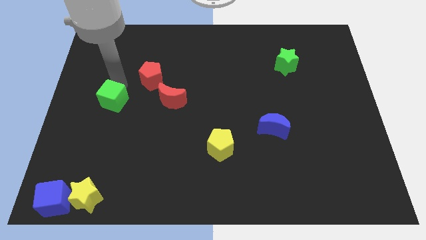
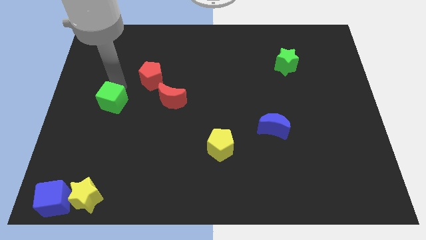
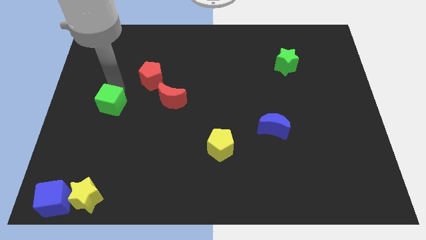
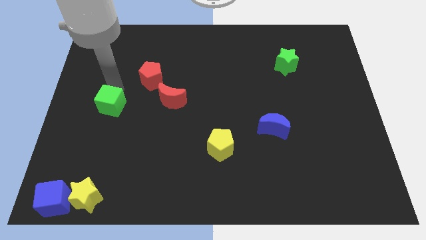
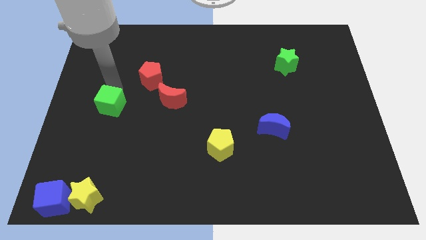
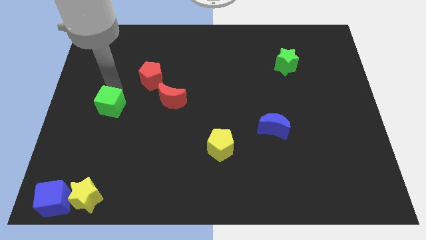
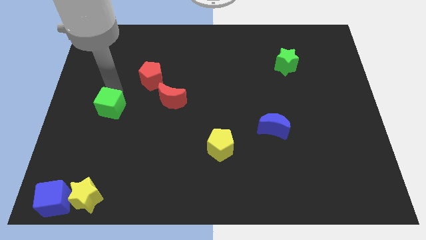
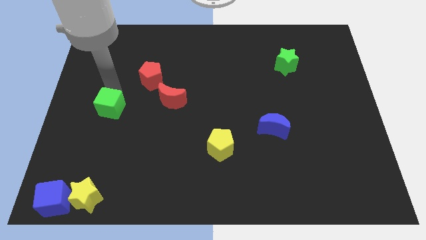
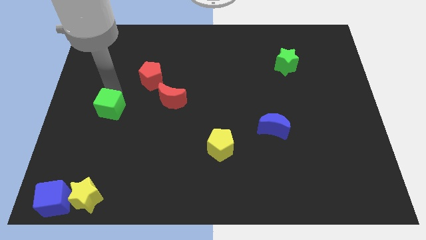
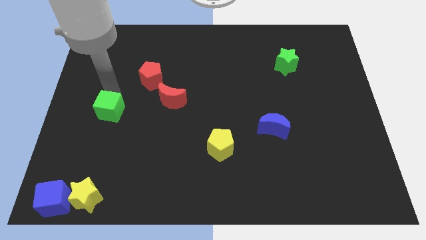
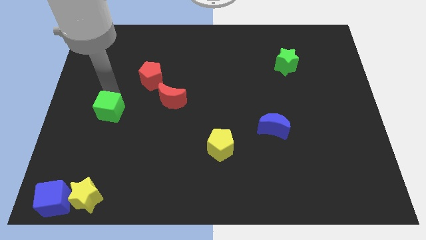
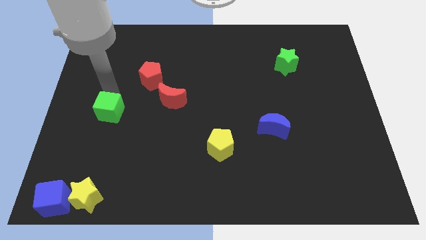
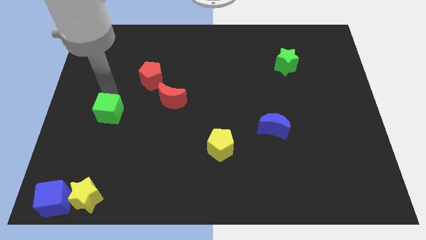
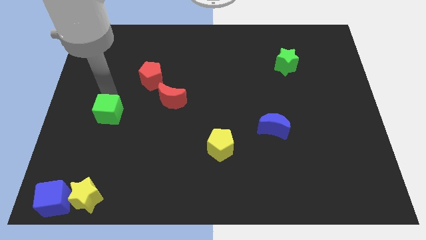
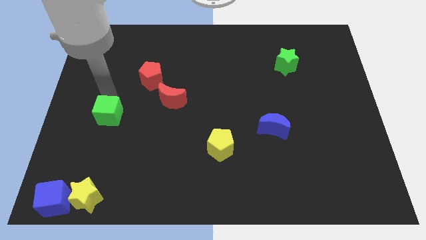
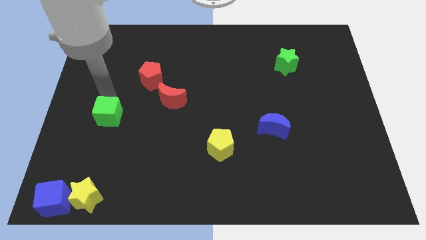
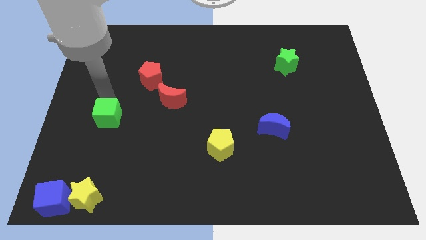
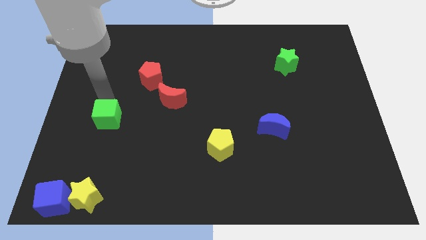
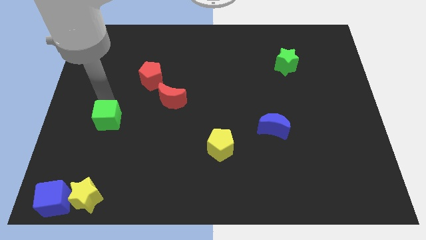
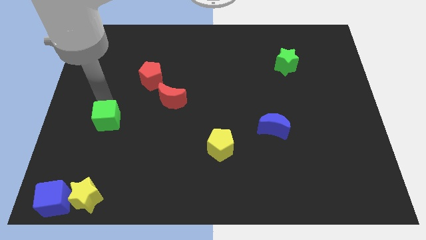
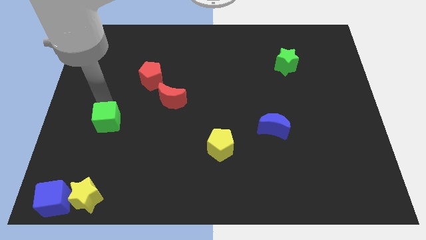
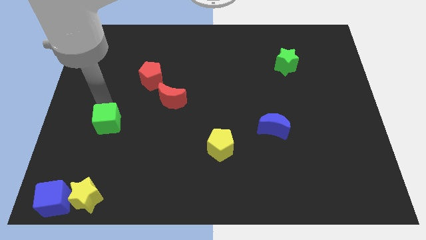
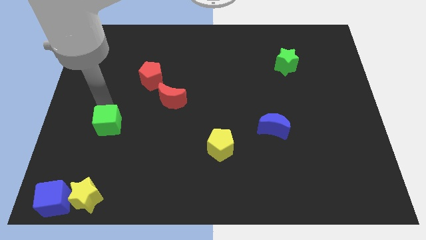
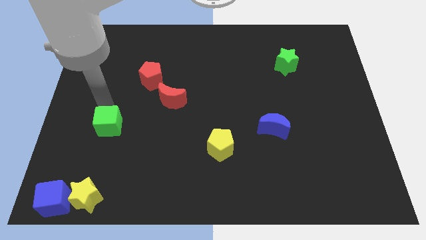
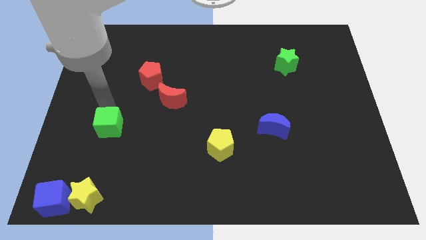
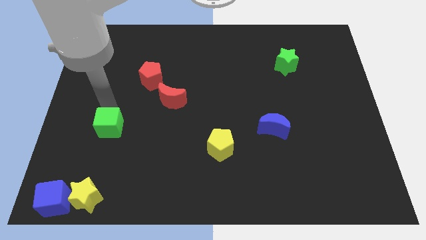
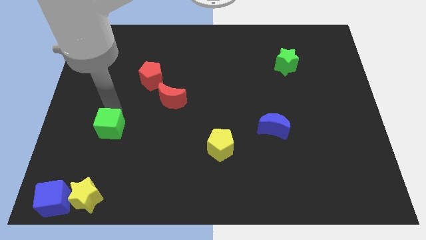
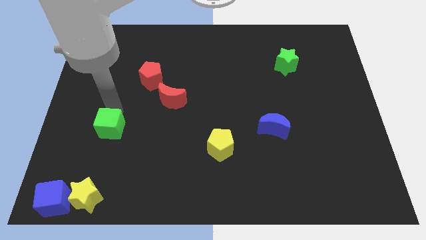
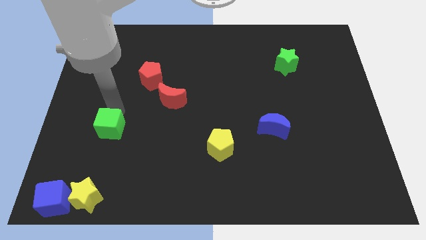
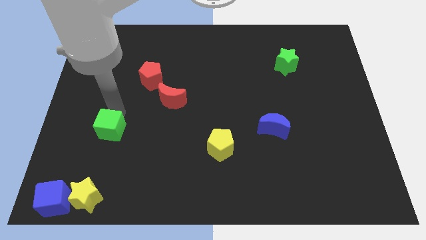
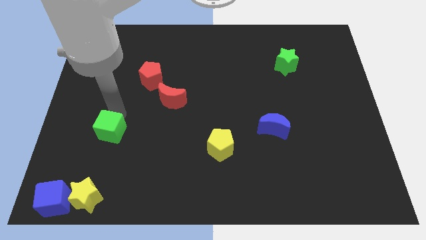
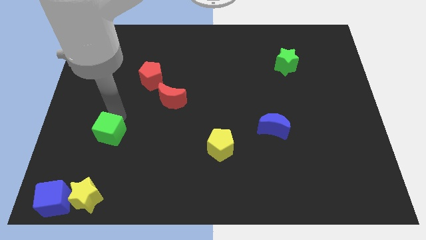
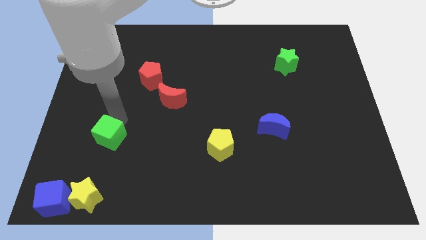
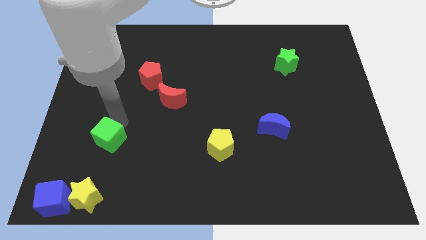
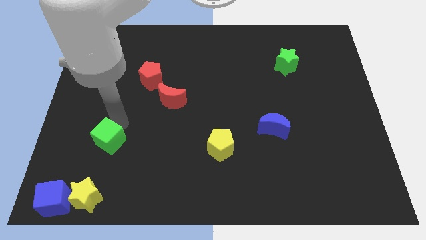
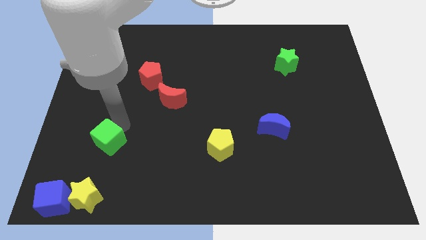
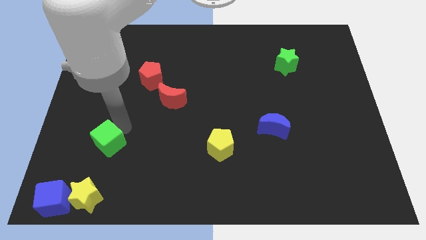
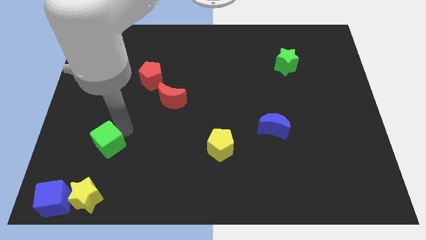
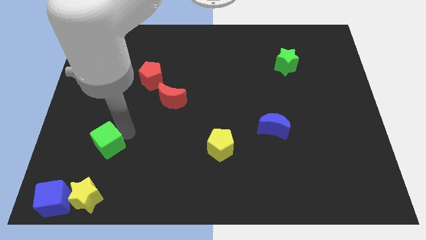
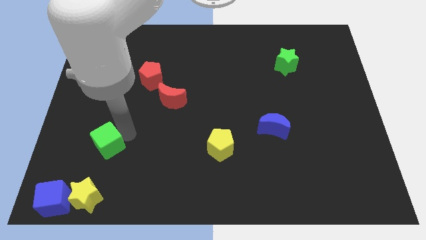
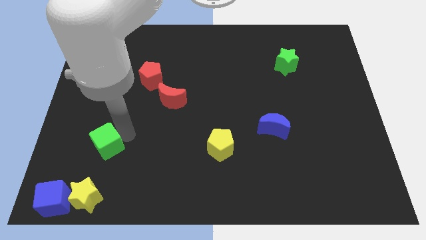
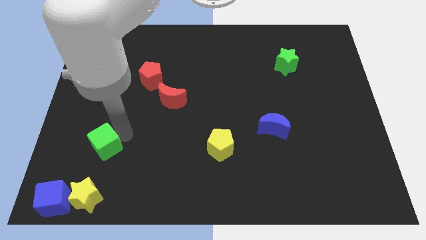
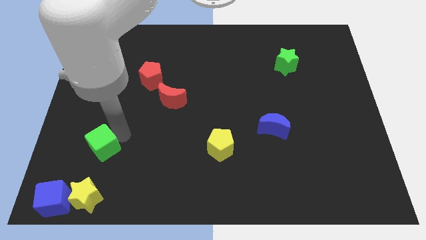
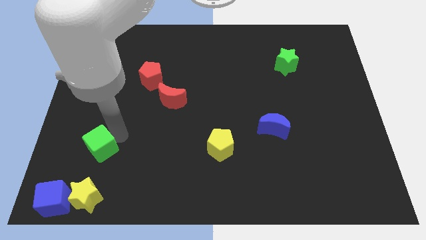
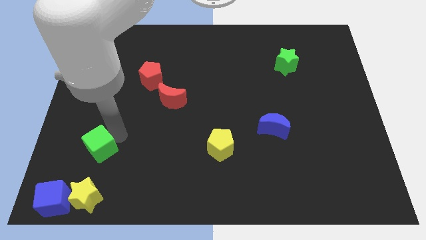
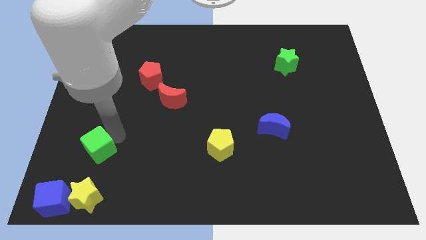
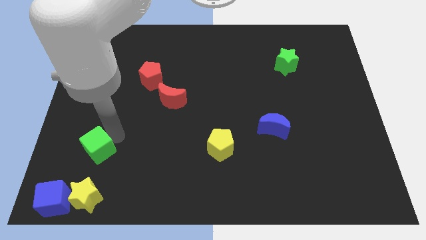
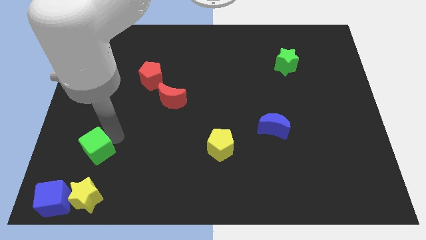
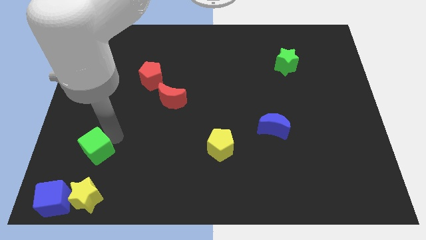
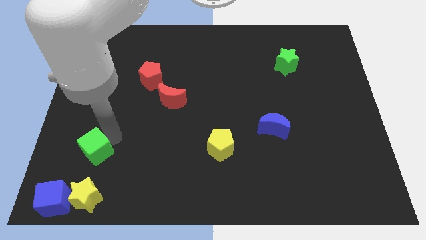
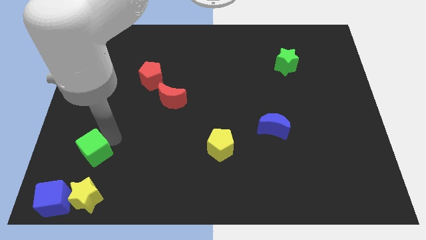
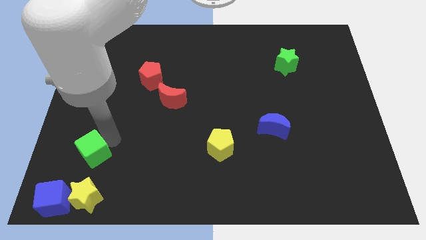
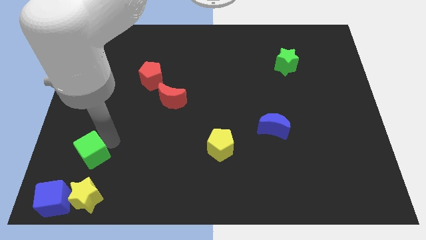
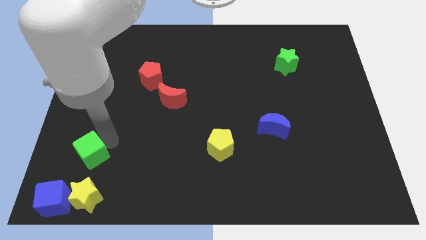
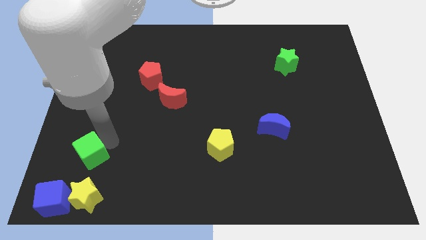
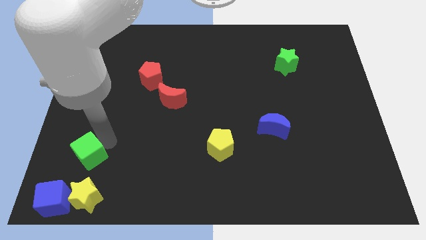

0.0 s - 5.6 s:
slide the green cube vertically above the yellow star

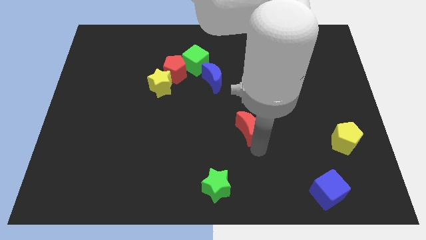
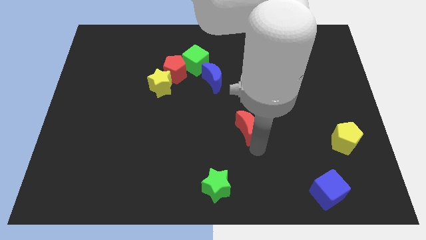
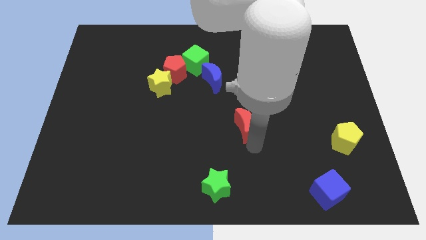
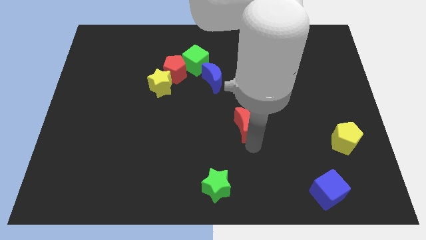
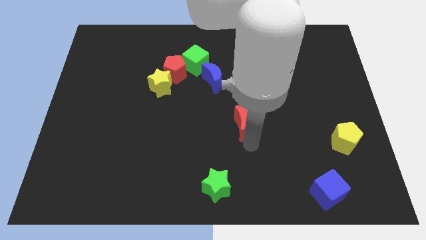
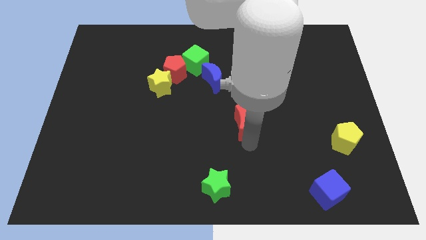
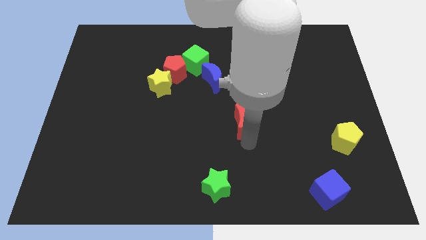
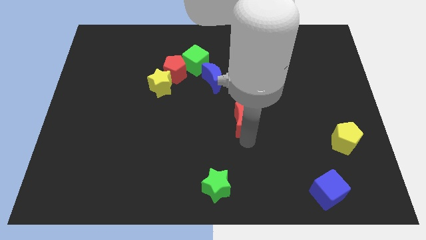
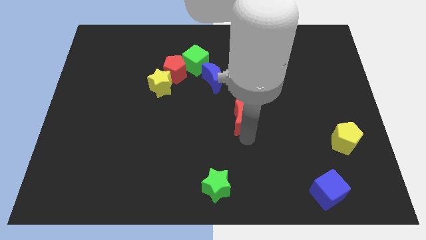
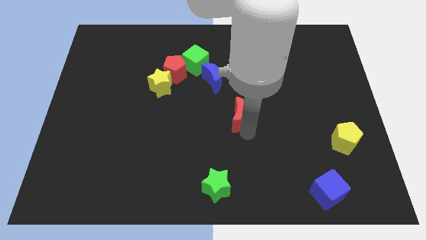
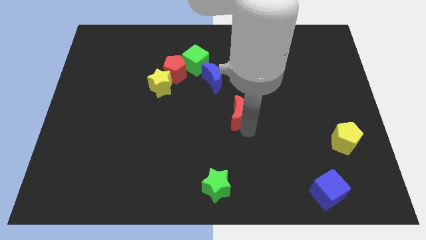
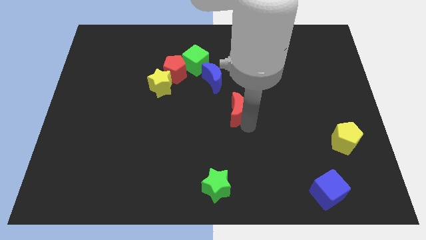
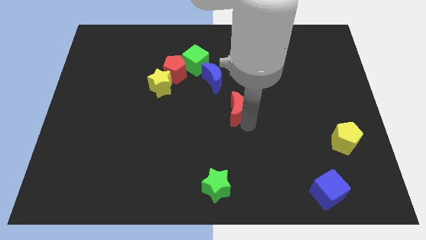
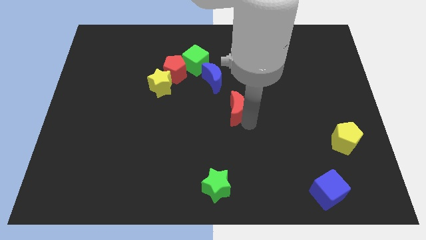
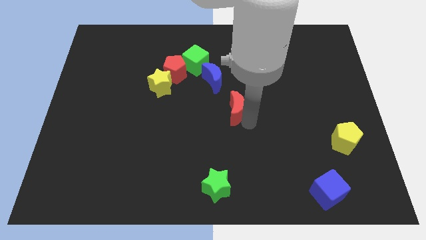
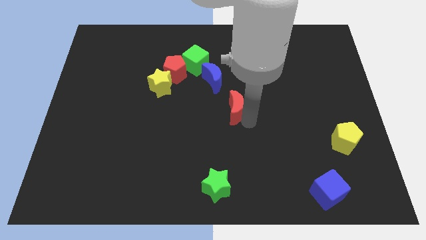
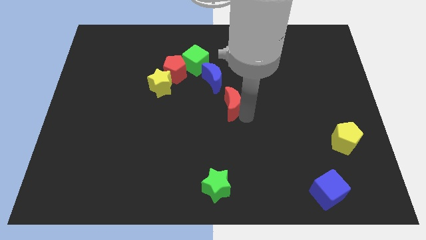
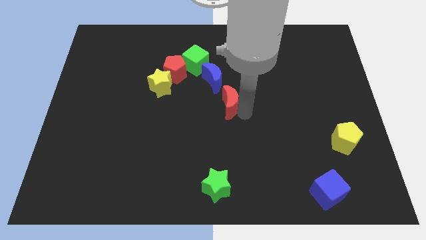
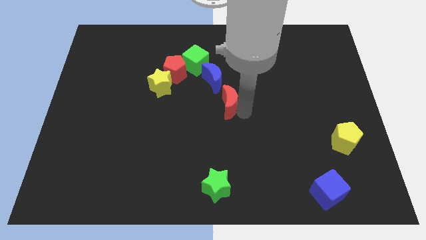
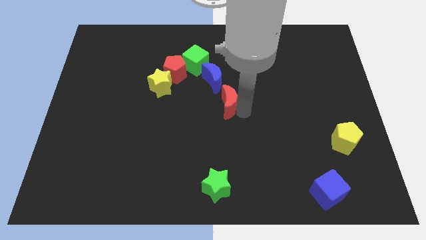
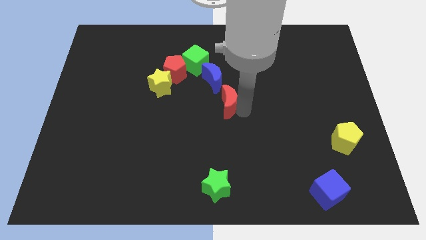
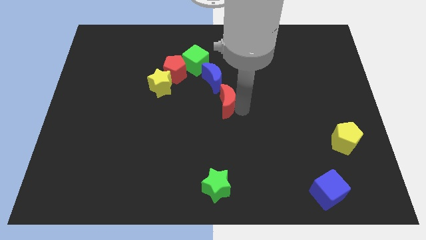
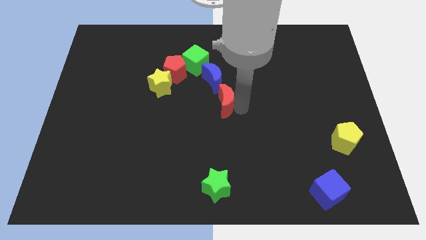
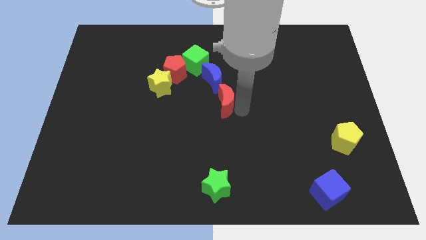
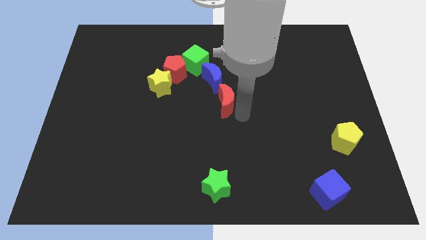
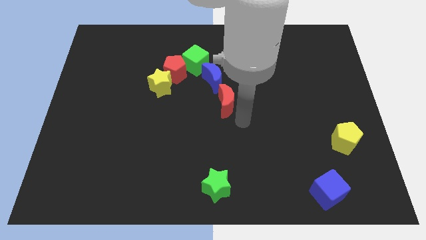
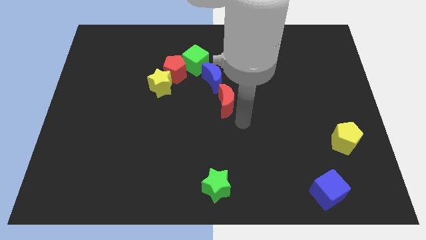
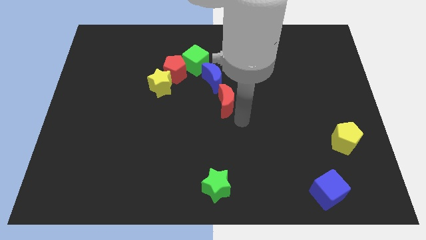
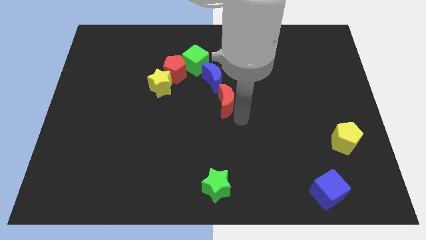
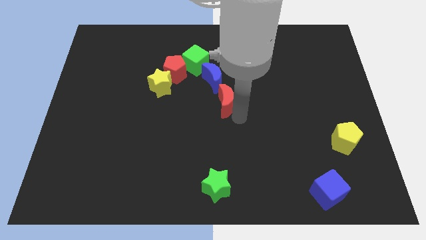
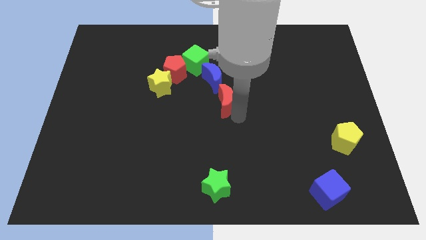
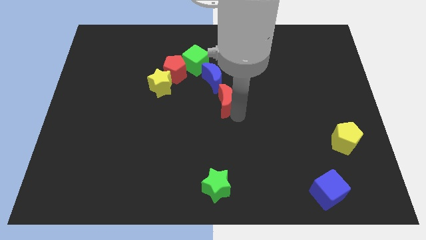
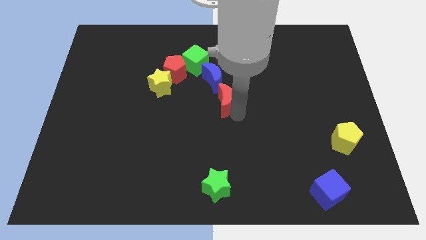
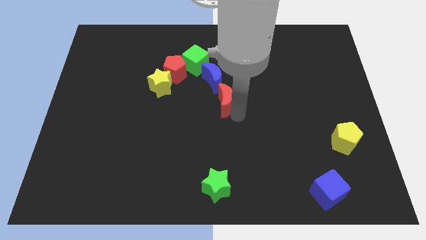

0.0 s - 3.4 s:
place red crescent at the bottom of blue crescent
